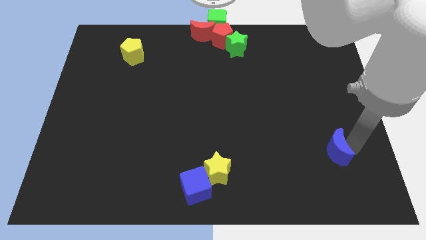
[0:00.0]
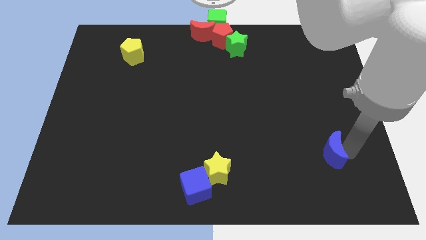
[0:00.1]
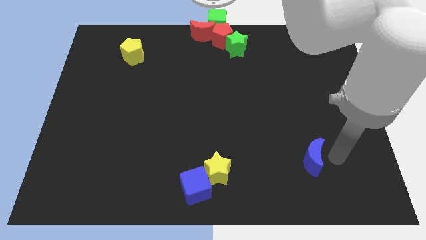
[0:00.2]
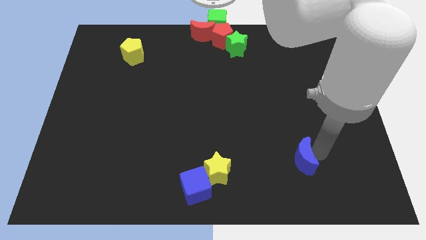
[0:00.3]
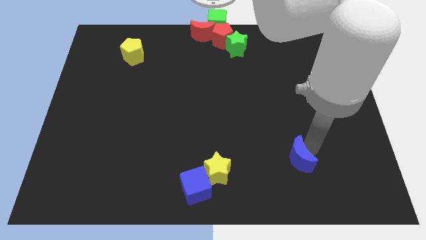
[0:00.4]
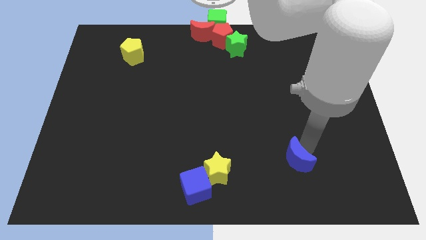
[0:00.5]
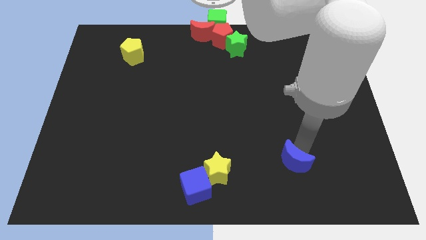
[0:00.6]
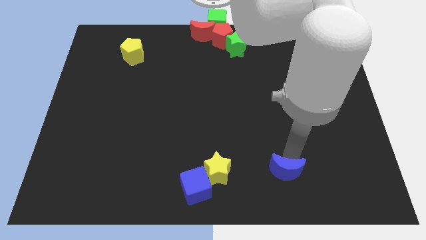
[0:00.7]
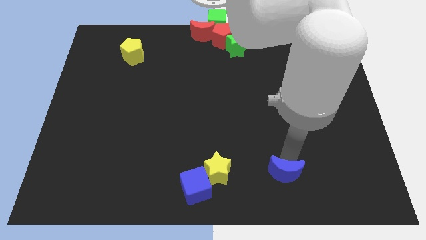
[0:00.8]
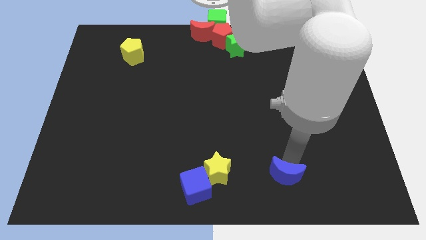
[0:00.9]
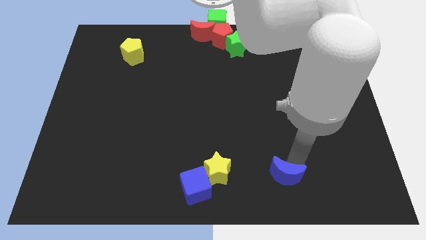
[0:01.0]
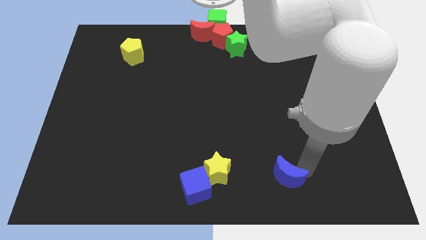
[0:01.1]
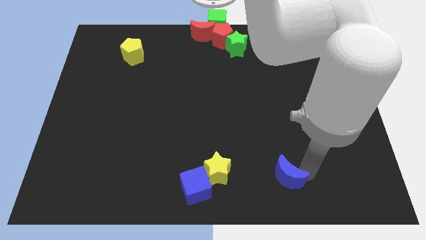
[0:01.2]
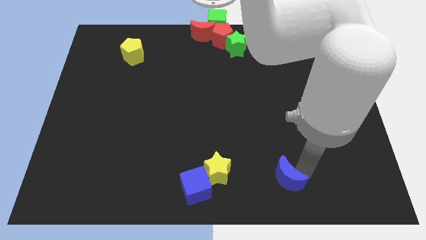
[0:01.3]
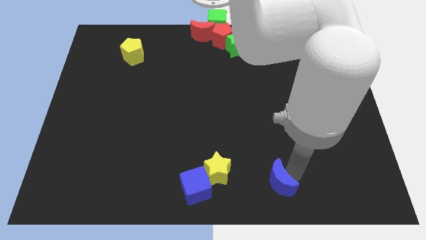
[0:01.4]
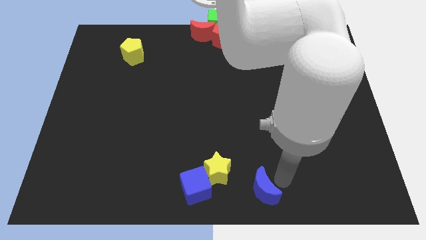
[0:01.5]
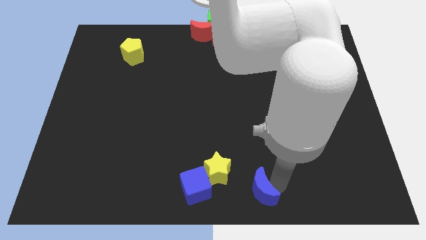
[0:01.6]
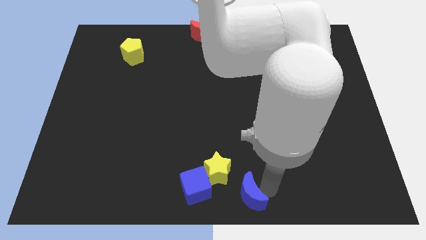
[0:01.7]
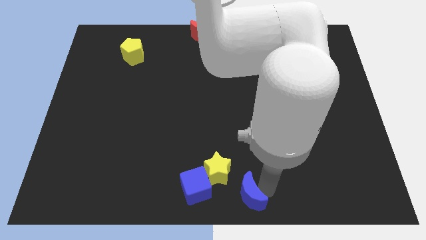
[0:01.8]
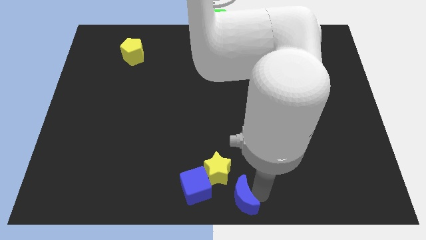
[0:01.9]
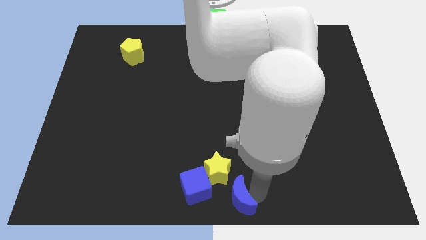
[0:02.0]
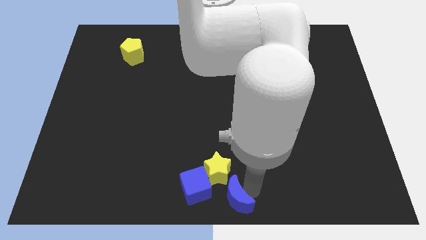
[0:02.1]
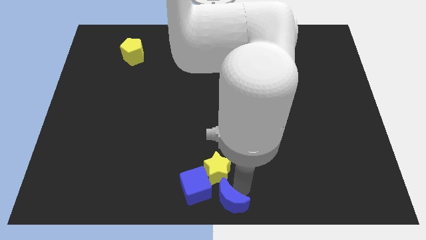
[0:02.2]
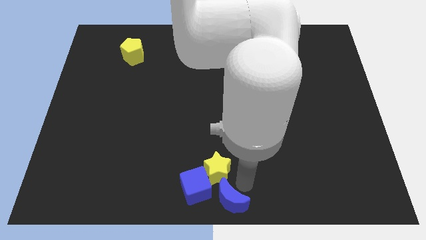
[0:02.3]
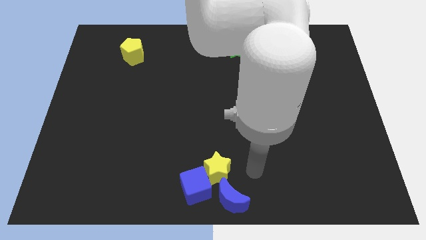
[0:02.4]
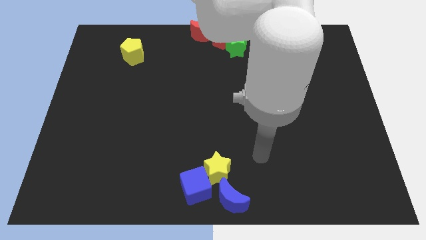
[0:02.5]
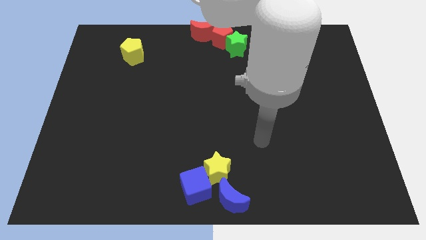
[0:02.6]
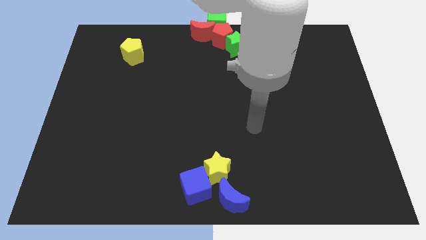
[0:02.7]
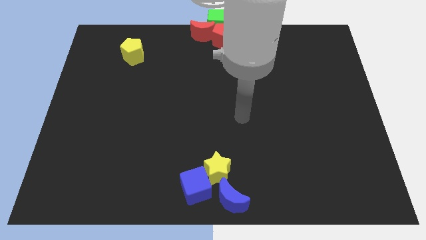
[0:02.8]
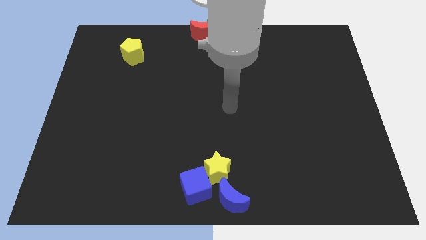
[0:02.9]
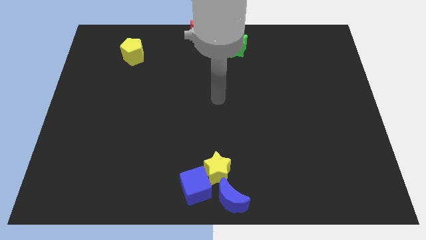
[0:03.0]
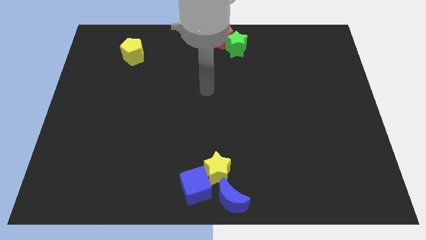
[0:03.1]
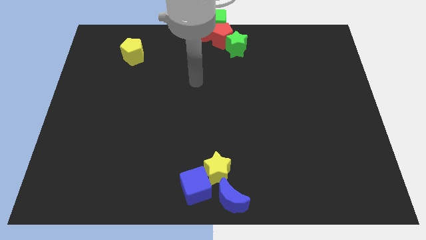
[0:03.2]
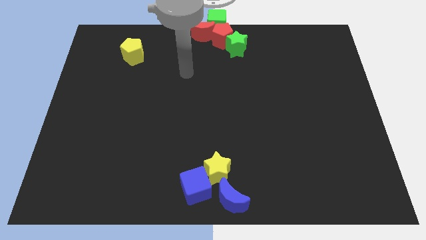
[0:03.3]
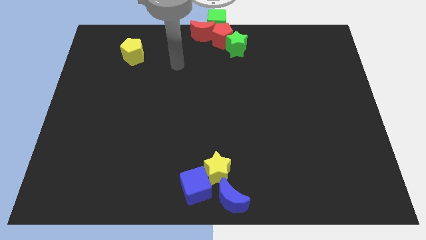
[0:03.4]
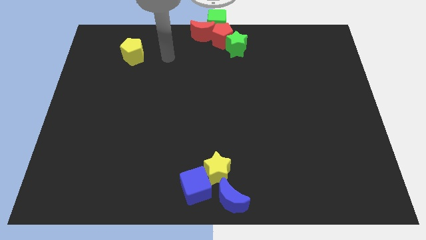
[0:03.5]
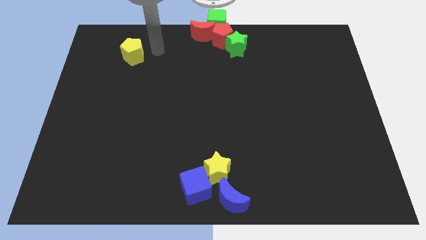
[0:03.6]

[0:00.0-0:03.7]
move the blue crescent to the bottom center of the board

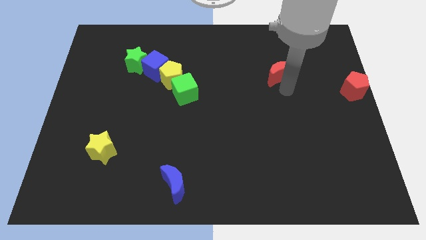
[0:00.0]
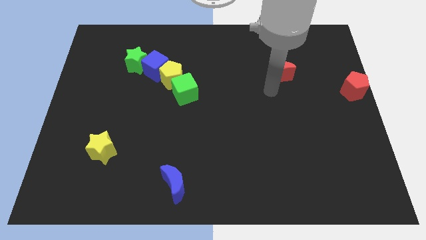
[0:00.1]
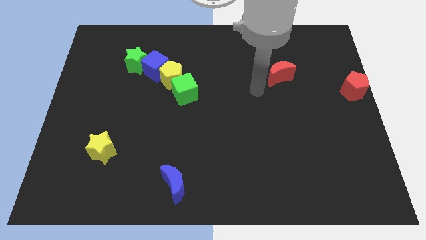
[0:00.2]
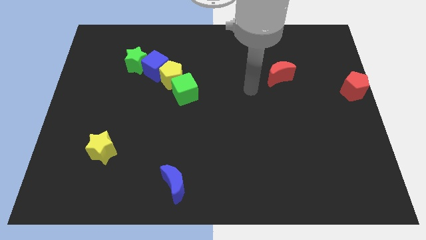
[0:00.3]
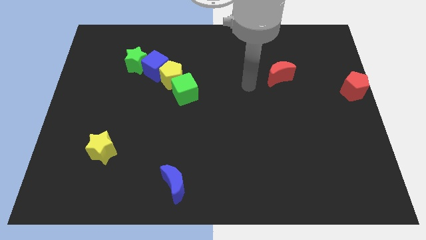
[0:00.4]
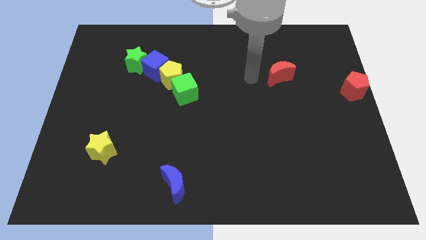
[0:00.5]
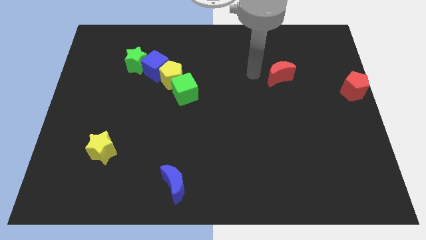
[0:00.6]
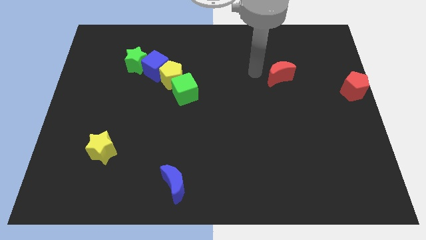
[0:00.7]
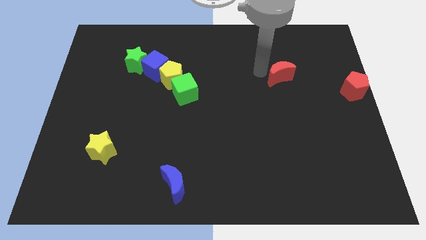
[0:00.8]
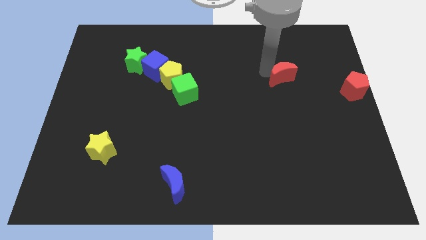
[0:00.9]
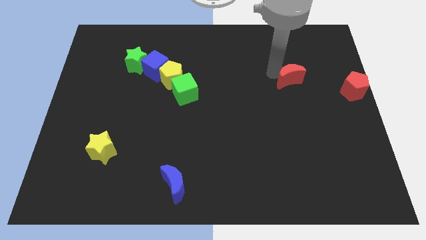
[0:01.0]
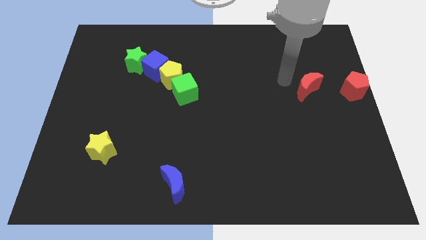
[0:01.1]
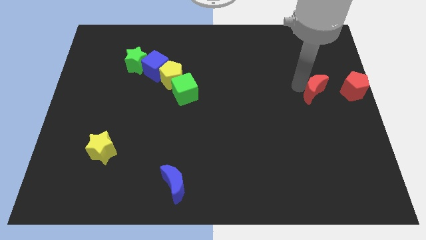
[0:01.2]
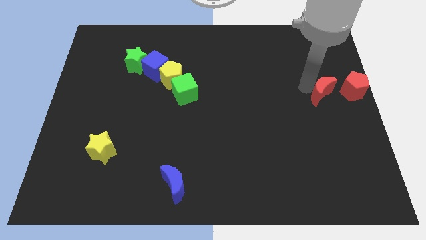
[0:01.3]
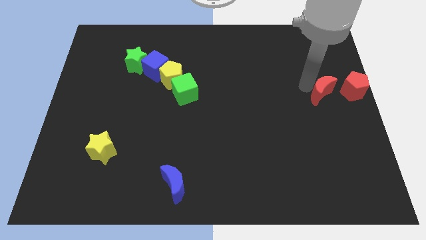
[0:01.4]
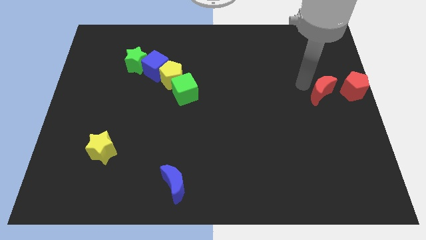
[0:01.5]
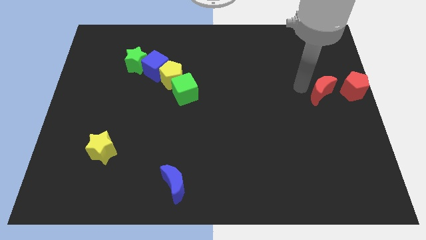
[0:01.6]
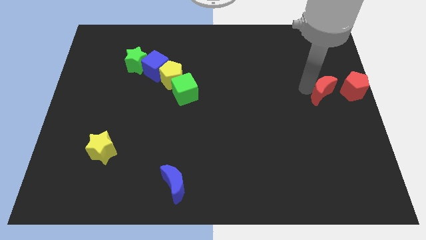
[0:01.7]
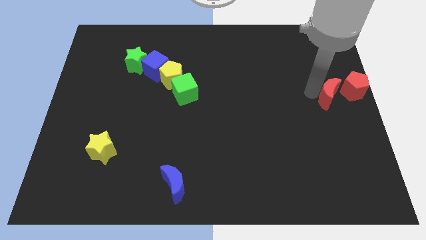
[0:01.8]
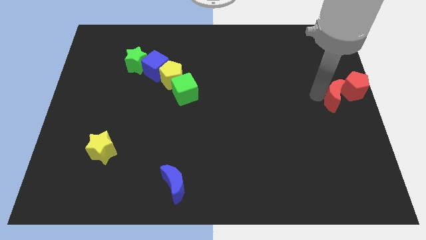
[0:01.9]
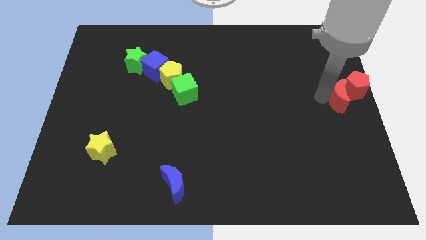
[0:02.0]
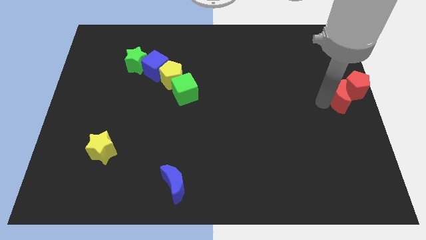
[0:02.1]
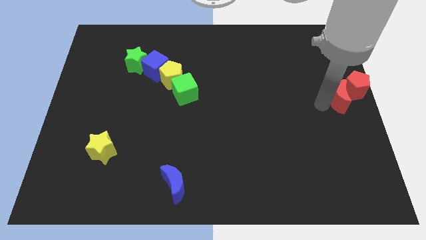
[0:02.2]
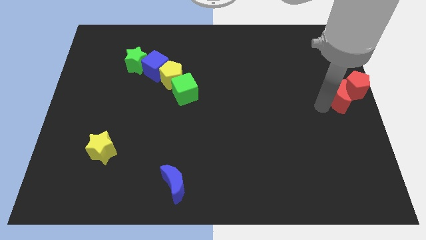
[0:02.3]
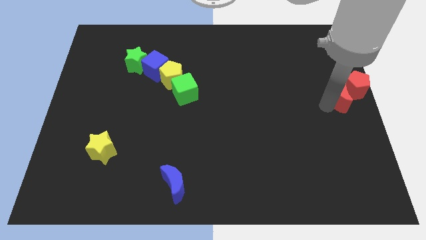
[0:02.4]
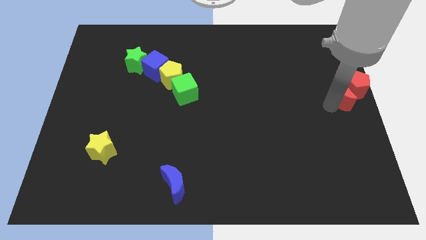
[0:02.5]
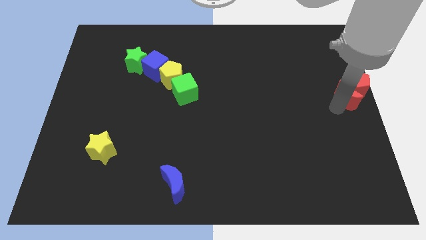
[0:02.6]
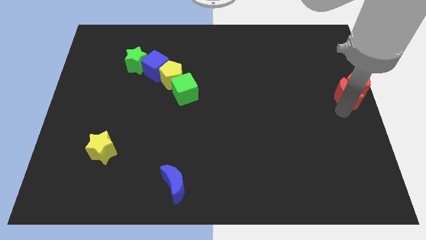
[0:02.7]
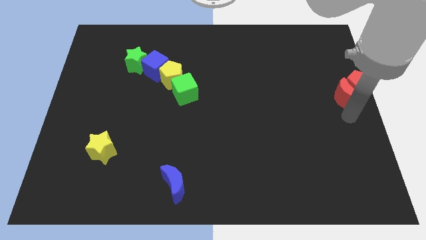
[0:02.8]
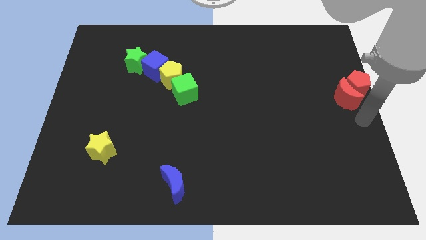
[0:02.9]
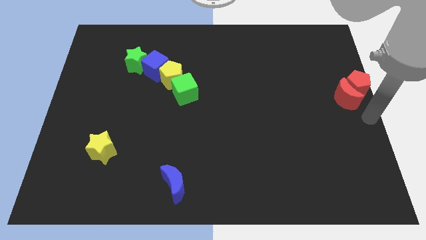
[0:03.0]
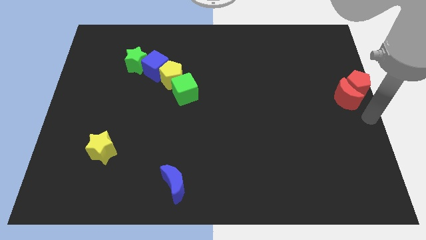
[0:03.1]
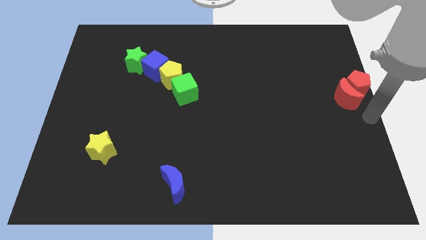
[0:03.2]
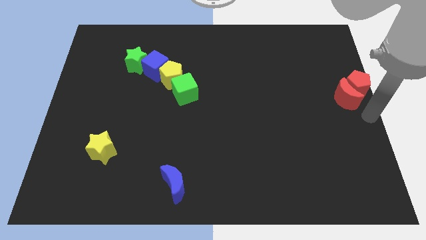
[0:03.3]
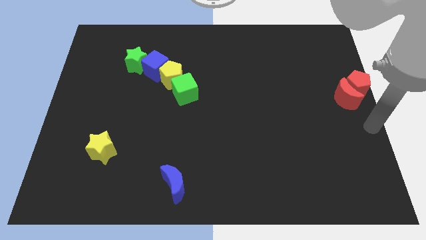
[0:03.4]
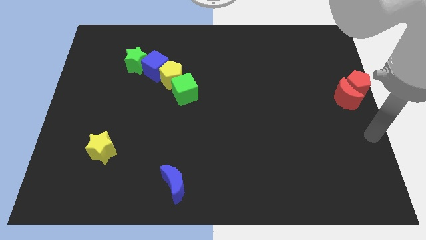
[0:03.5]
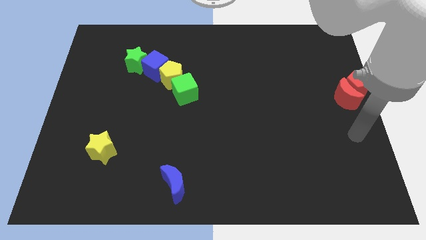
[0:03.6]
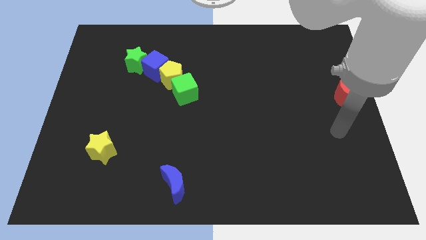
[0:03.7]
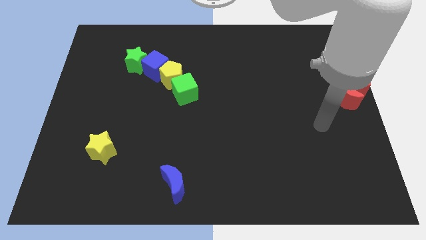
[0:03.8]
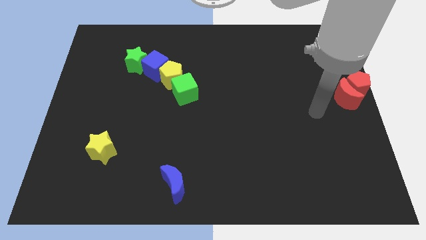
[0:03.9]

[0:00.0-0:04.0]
push the red crescent into the red pentagon

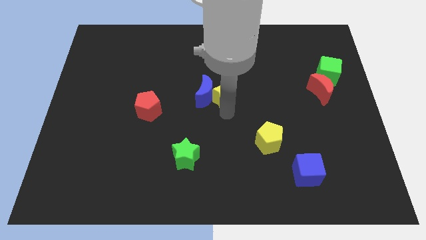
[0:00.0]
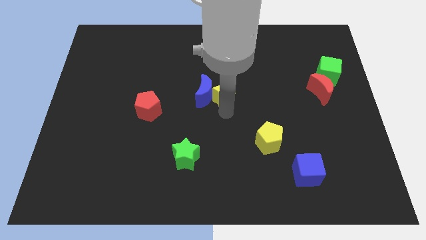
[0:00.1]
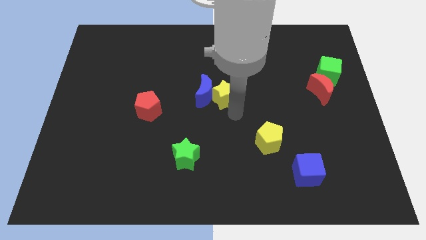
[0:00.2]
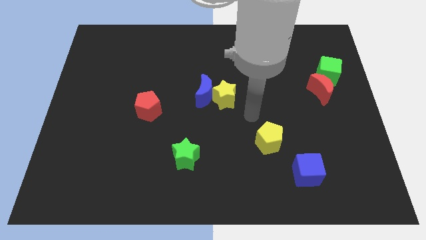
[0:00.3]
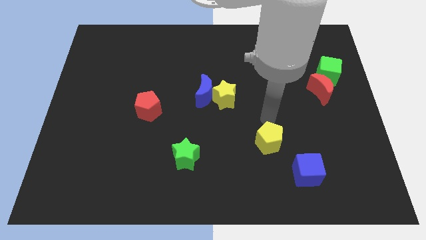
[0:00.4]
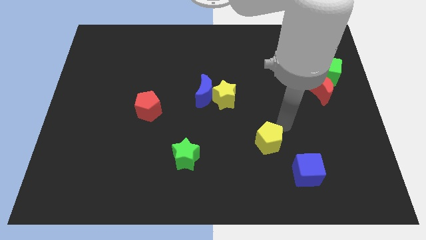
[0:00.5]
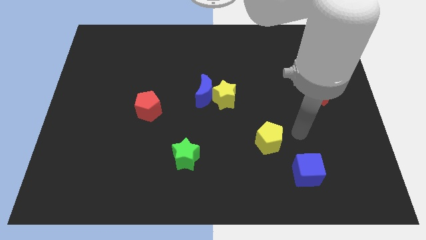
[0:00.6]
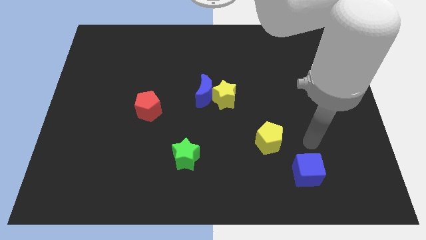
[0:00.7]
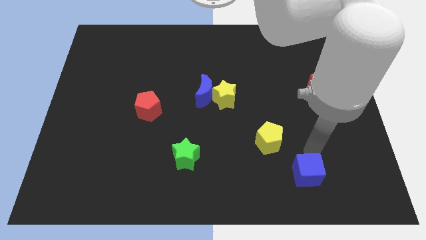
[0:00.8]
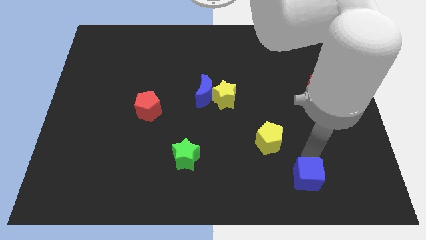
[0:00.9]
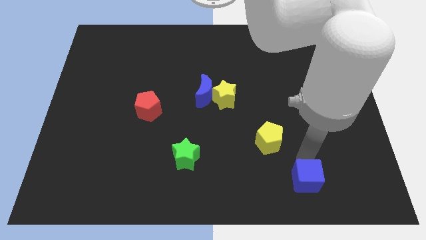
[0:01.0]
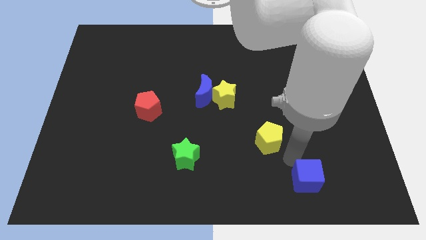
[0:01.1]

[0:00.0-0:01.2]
tap the blue cube
